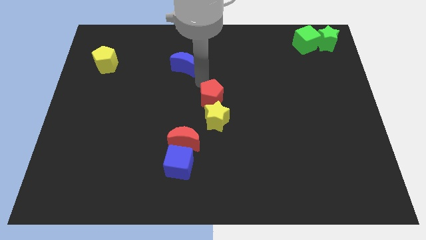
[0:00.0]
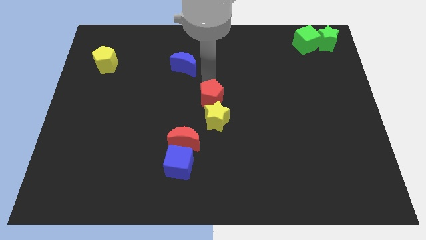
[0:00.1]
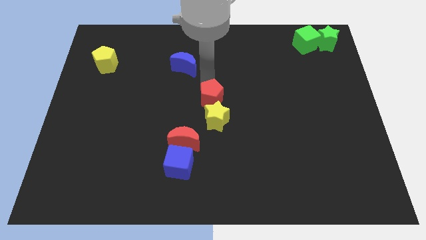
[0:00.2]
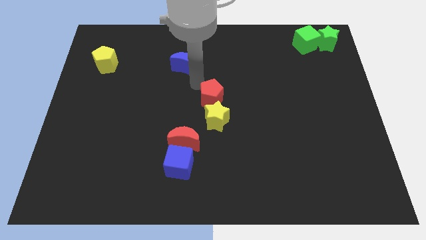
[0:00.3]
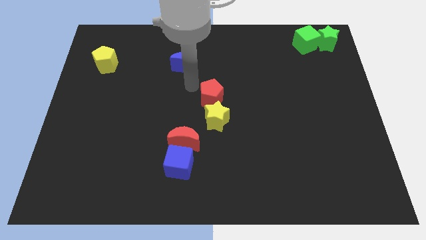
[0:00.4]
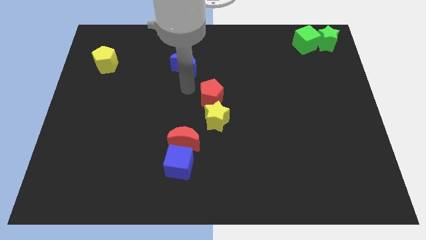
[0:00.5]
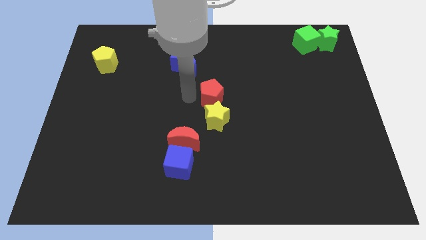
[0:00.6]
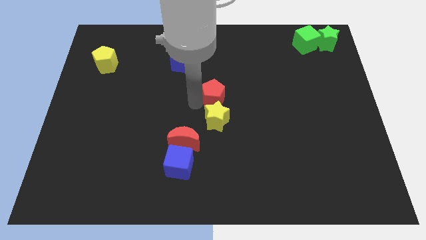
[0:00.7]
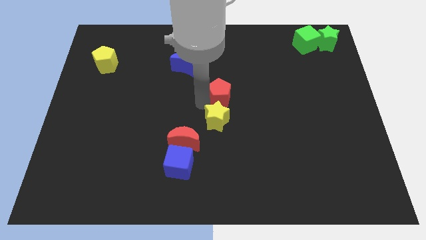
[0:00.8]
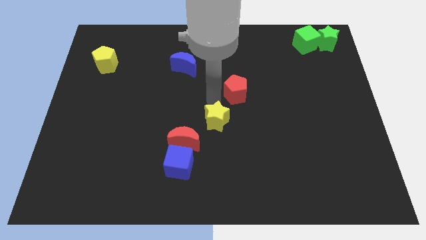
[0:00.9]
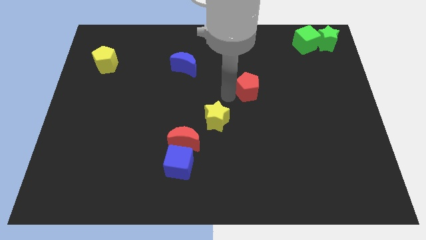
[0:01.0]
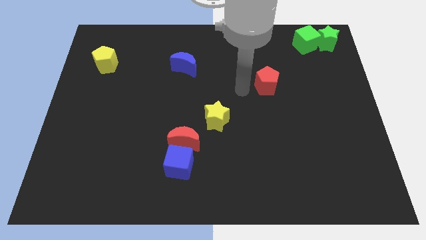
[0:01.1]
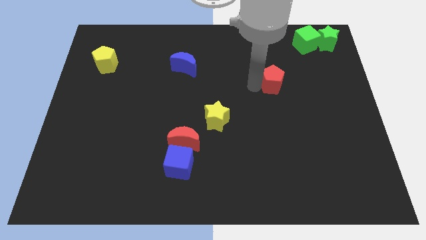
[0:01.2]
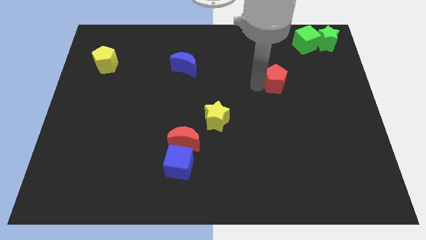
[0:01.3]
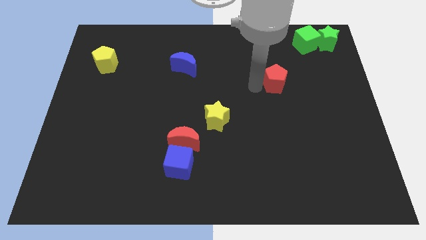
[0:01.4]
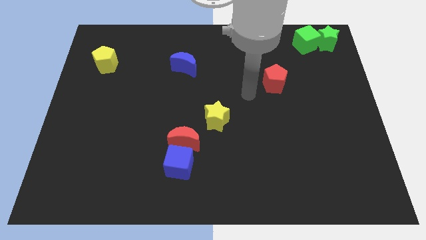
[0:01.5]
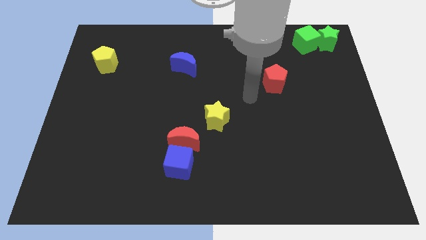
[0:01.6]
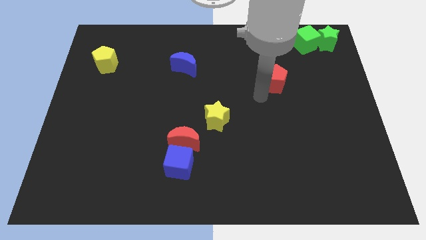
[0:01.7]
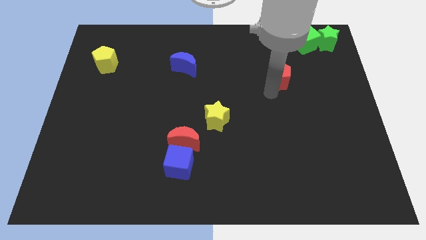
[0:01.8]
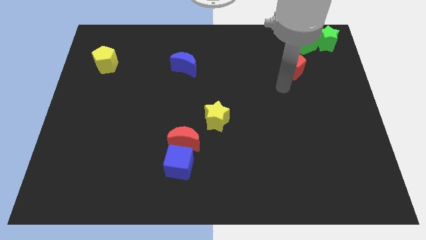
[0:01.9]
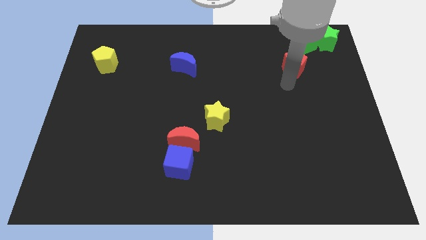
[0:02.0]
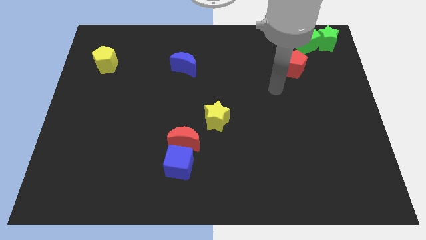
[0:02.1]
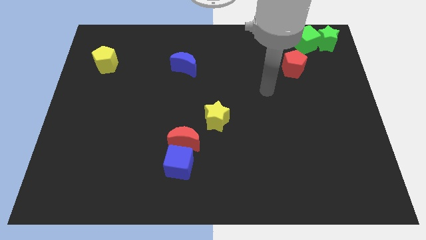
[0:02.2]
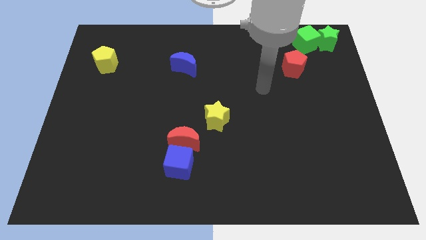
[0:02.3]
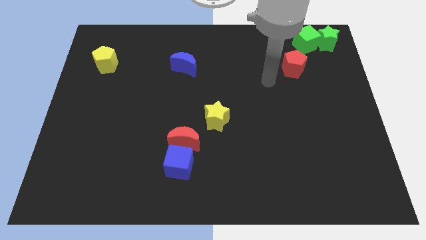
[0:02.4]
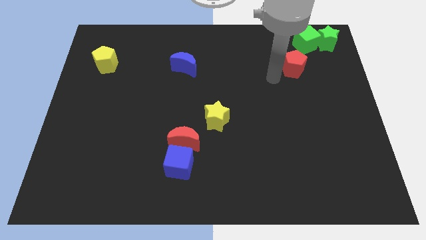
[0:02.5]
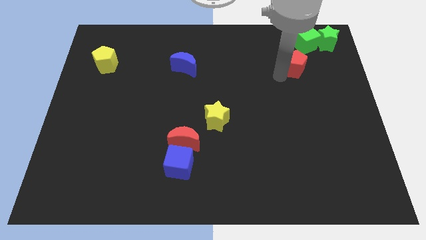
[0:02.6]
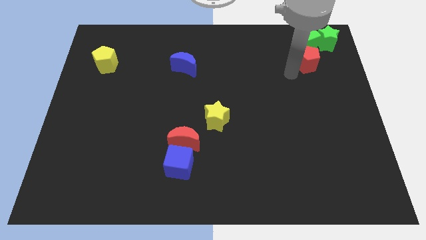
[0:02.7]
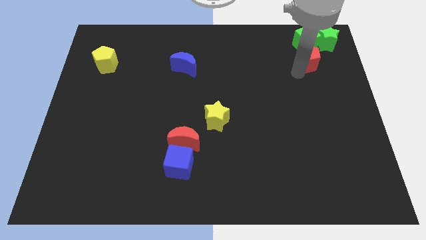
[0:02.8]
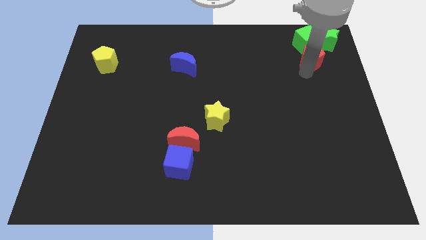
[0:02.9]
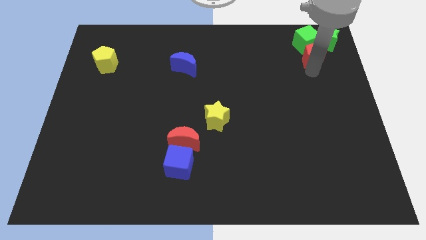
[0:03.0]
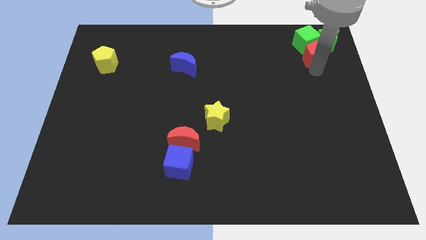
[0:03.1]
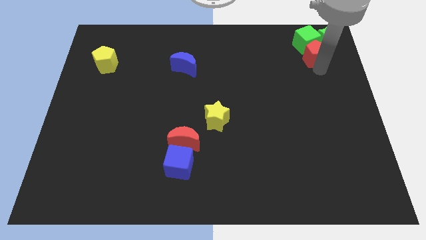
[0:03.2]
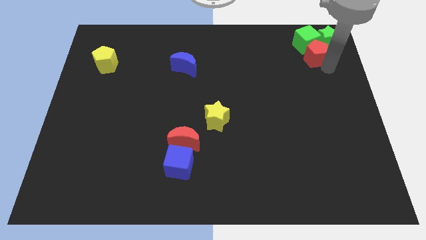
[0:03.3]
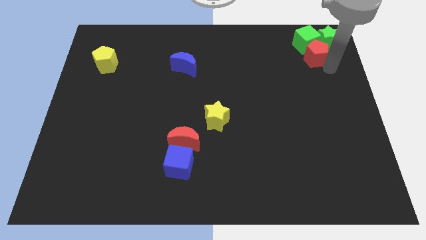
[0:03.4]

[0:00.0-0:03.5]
place the red pentagon to the bottom of the green blocks

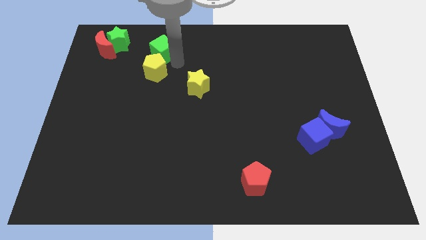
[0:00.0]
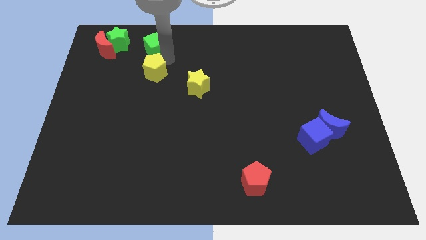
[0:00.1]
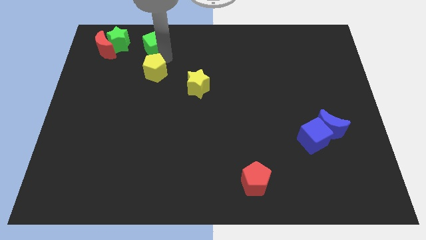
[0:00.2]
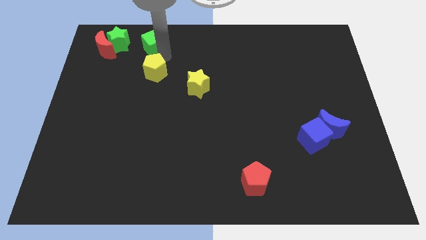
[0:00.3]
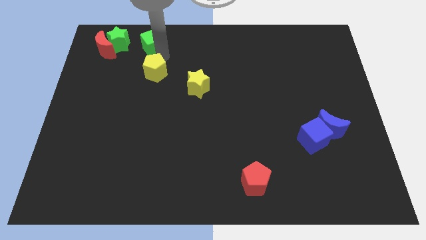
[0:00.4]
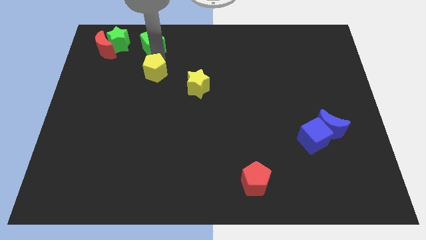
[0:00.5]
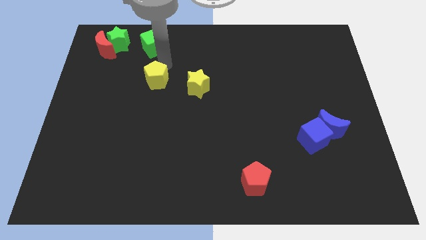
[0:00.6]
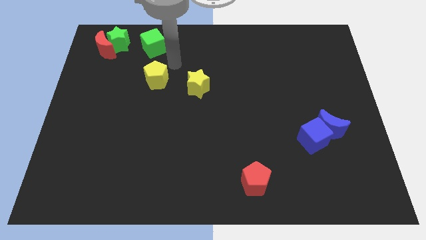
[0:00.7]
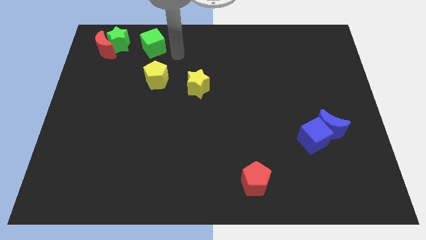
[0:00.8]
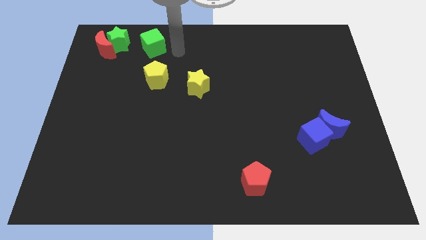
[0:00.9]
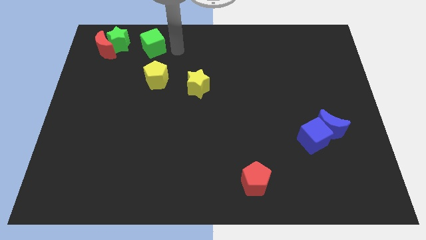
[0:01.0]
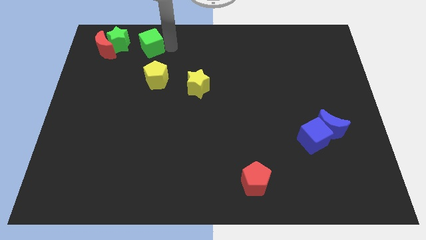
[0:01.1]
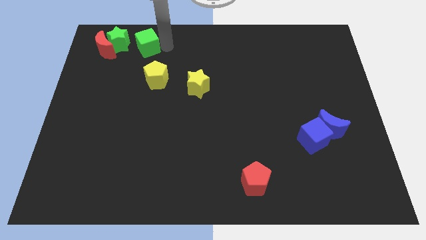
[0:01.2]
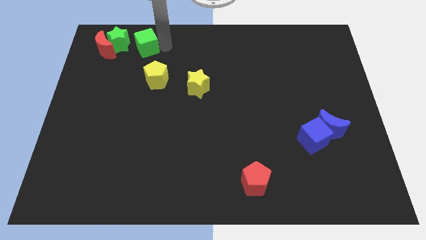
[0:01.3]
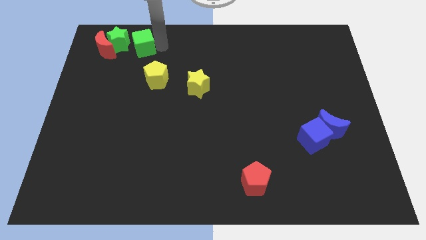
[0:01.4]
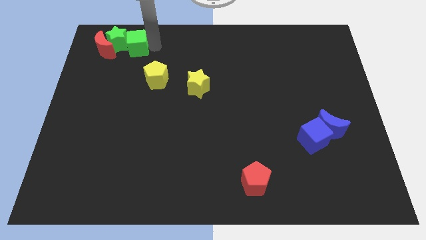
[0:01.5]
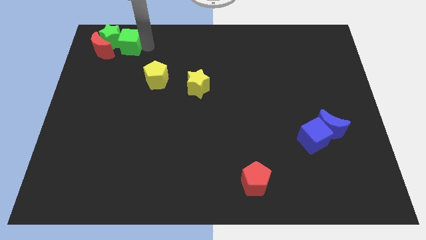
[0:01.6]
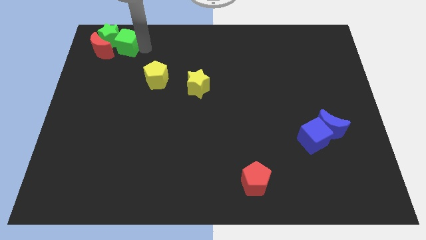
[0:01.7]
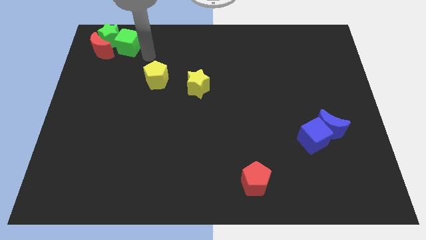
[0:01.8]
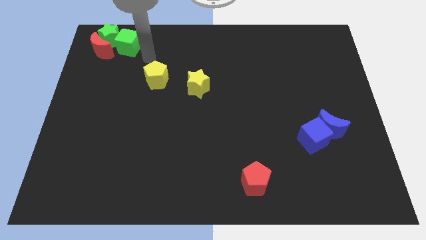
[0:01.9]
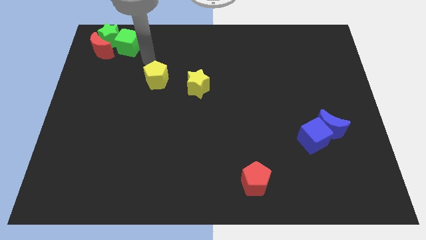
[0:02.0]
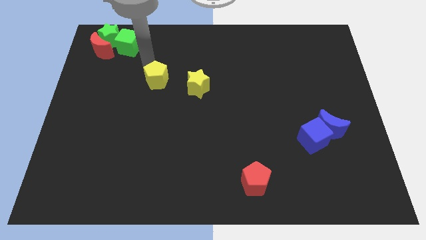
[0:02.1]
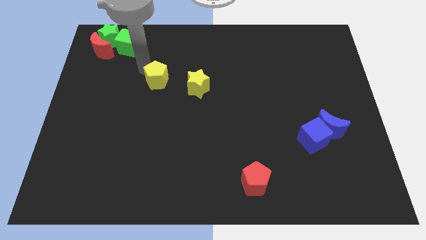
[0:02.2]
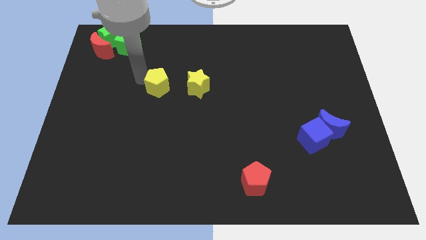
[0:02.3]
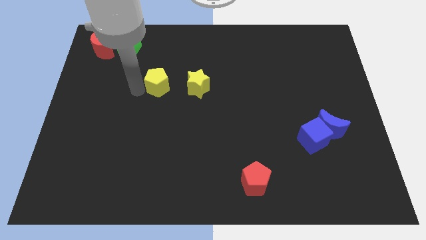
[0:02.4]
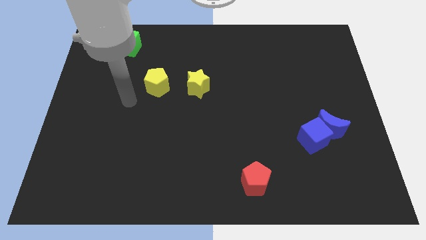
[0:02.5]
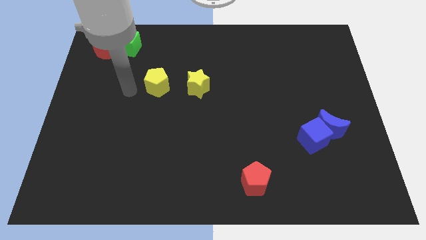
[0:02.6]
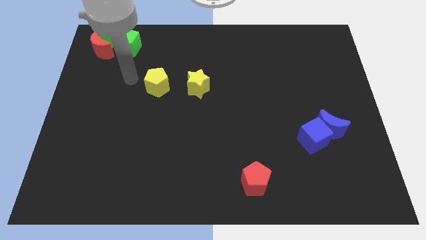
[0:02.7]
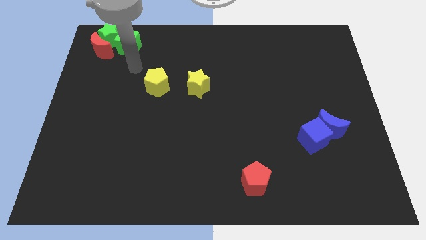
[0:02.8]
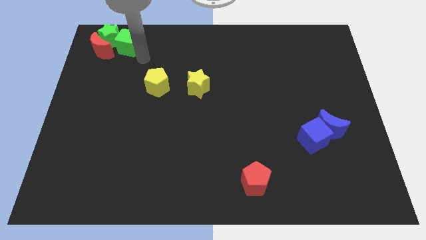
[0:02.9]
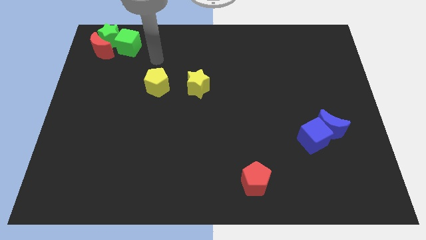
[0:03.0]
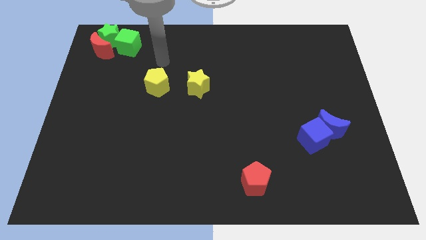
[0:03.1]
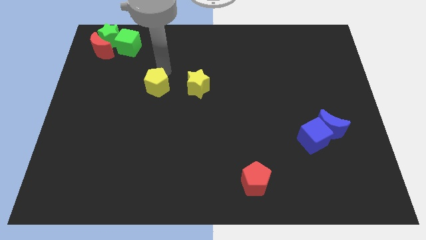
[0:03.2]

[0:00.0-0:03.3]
move your arm towards the top side of the yellow pentagon

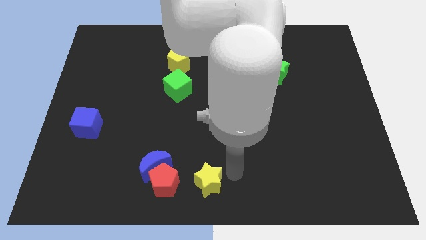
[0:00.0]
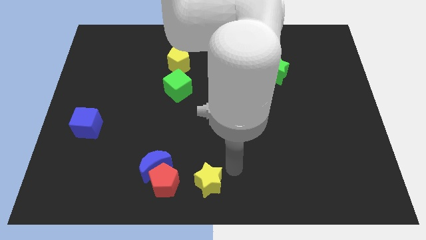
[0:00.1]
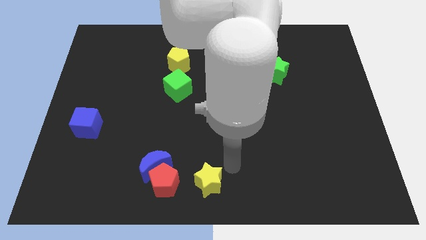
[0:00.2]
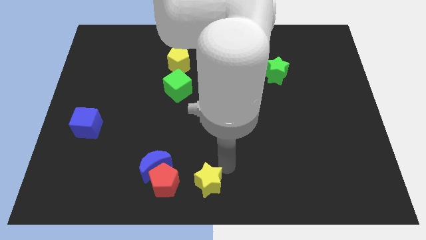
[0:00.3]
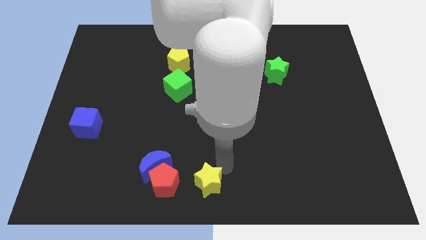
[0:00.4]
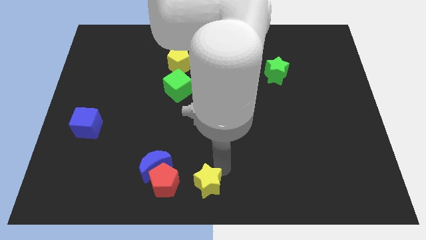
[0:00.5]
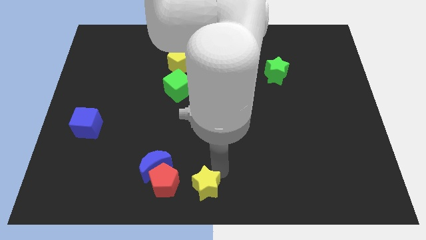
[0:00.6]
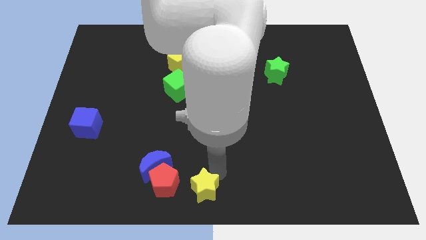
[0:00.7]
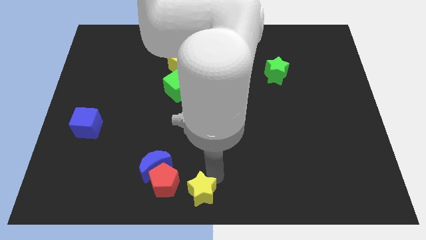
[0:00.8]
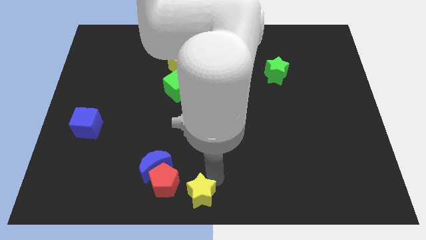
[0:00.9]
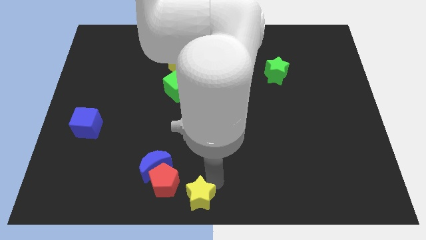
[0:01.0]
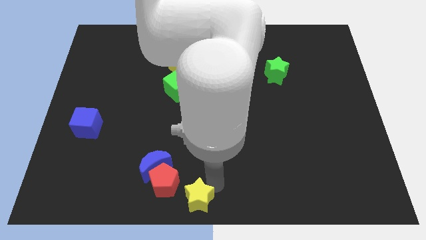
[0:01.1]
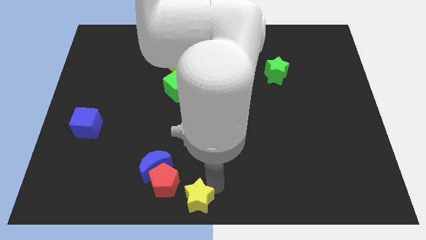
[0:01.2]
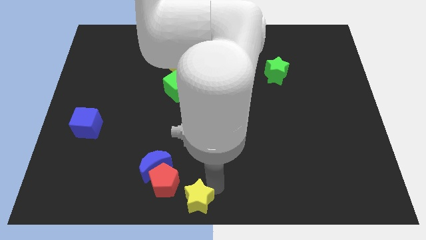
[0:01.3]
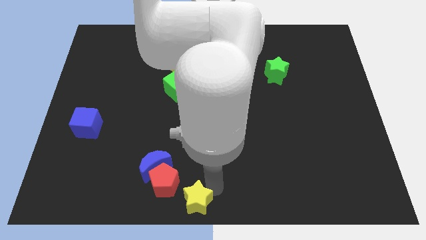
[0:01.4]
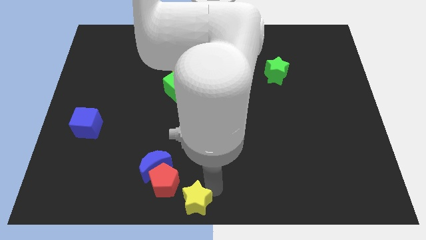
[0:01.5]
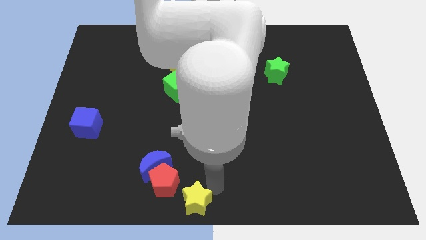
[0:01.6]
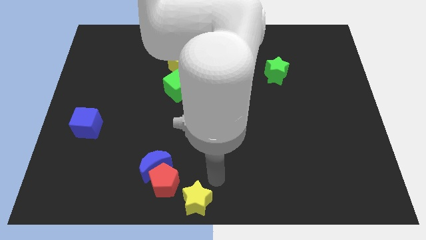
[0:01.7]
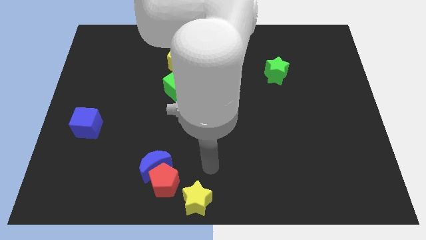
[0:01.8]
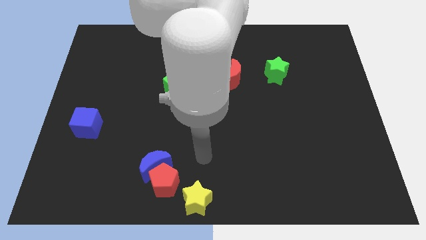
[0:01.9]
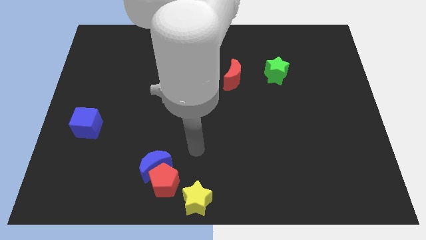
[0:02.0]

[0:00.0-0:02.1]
place yellow star at the bottom center
